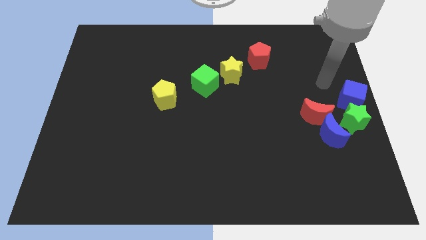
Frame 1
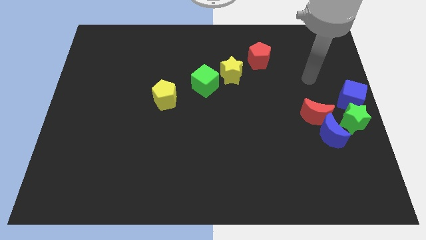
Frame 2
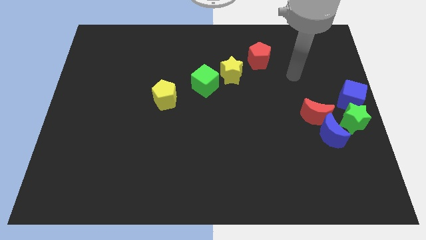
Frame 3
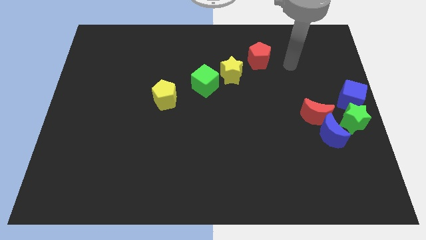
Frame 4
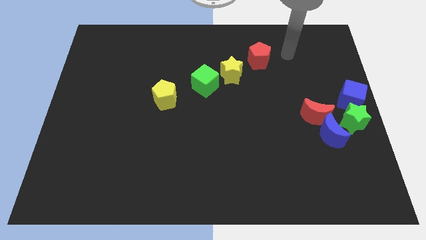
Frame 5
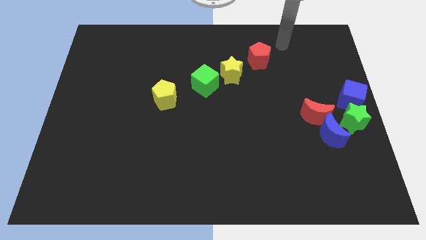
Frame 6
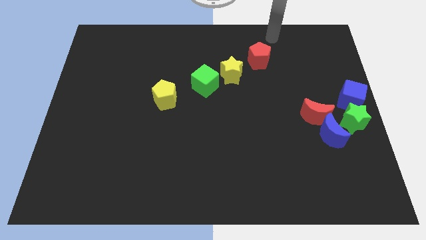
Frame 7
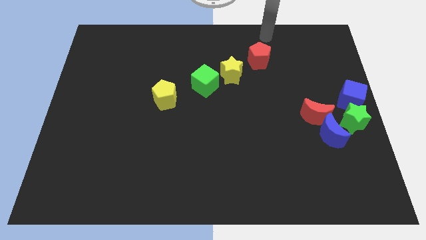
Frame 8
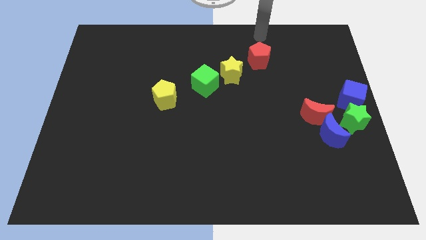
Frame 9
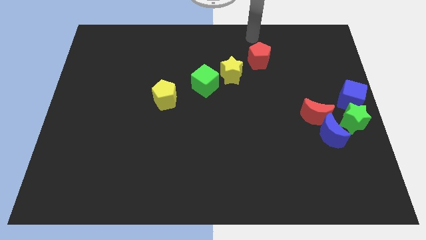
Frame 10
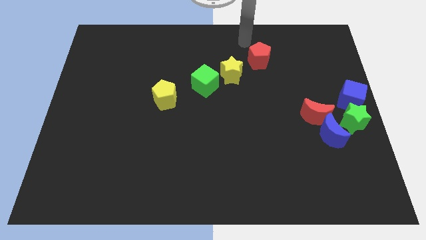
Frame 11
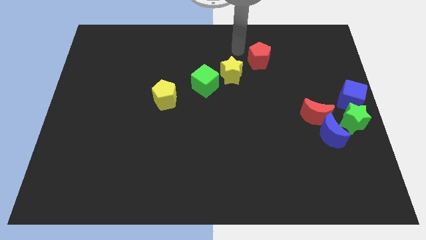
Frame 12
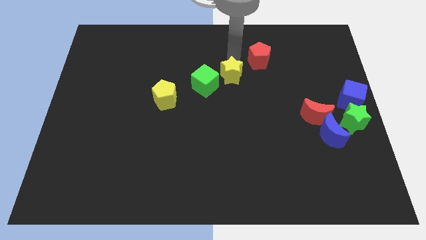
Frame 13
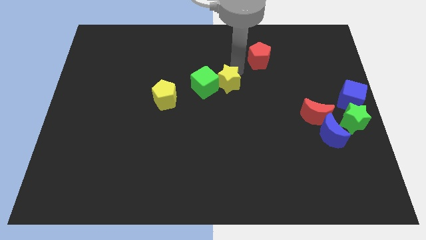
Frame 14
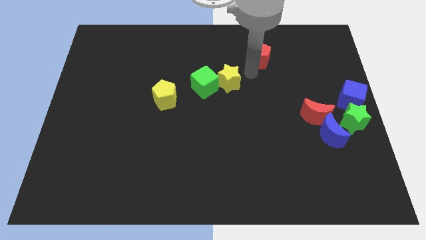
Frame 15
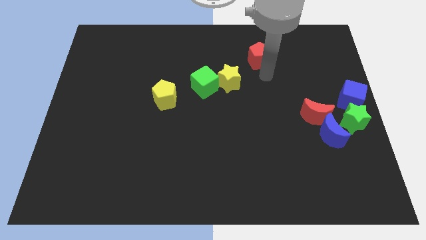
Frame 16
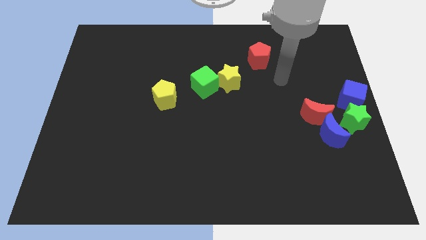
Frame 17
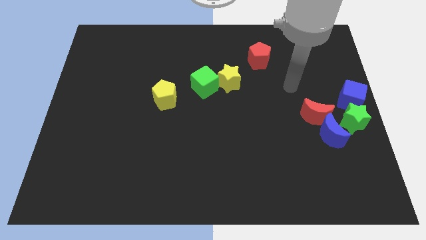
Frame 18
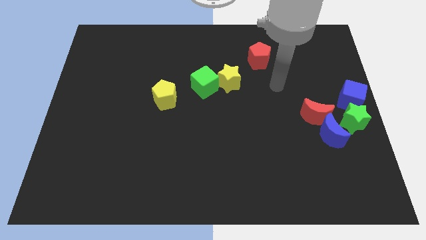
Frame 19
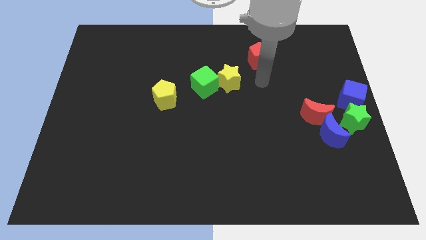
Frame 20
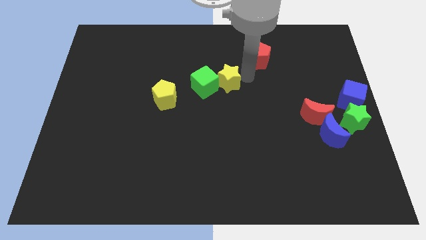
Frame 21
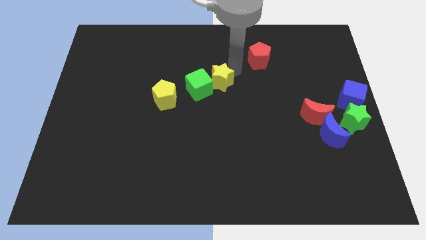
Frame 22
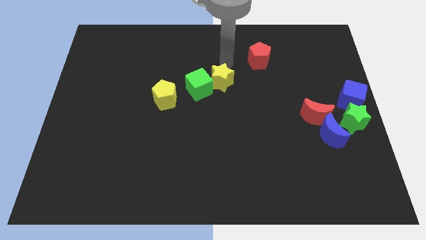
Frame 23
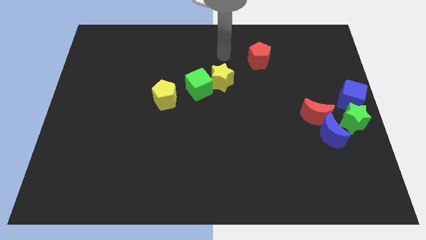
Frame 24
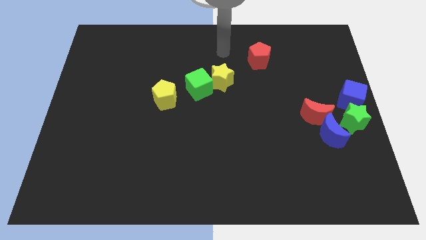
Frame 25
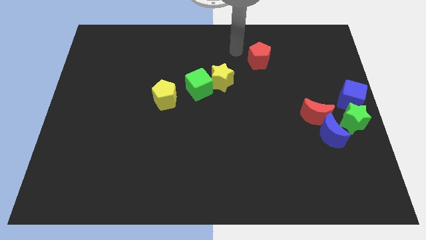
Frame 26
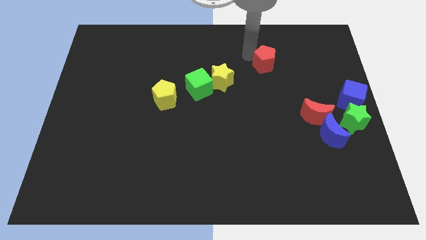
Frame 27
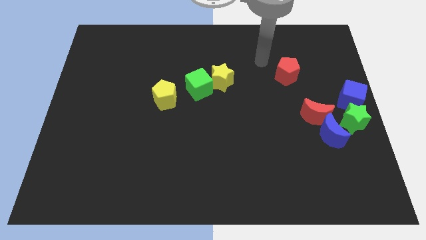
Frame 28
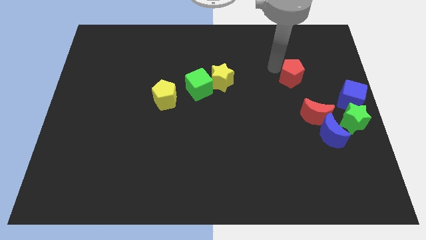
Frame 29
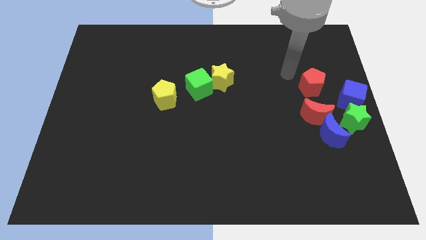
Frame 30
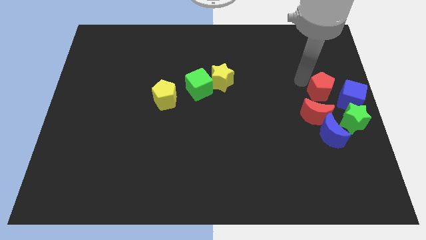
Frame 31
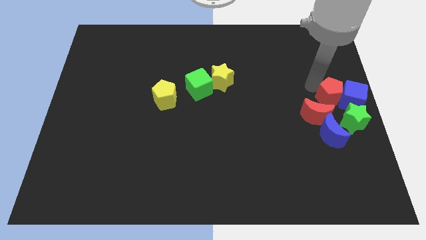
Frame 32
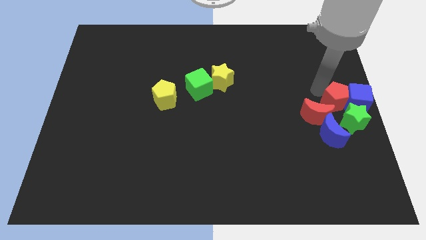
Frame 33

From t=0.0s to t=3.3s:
place the red pentagon to the right of the red crescent

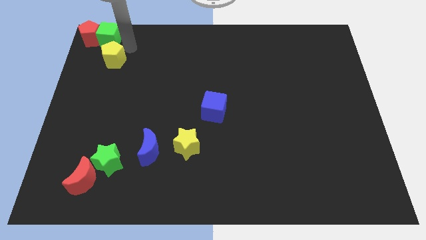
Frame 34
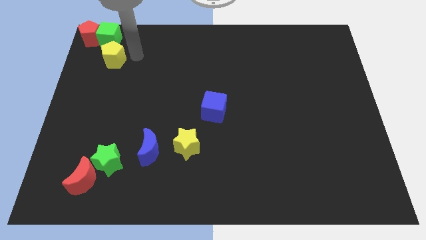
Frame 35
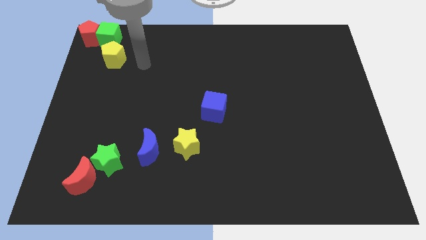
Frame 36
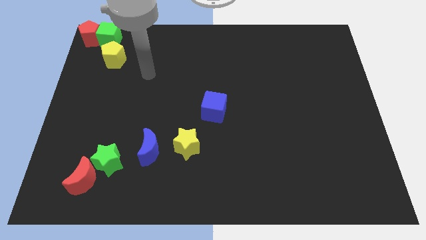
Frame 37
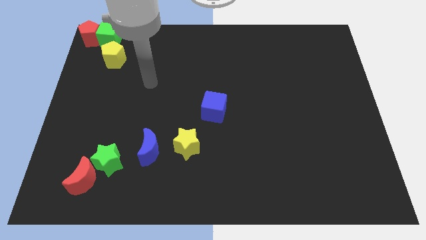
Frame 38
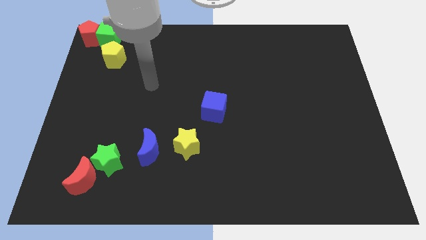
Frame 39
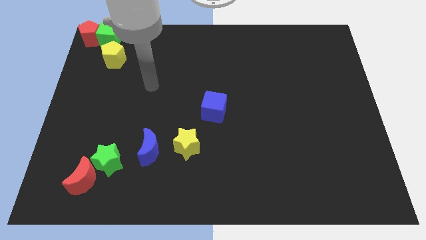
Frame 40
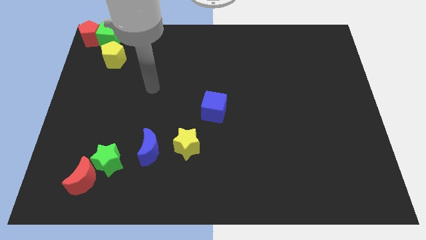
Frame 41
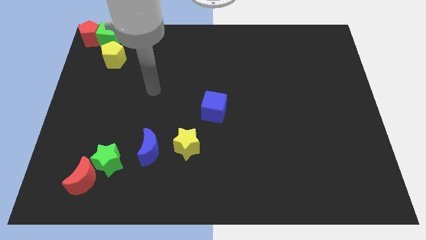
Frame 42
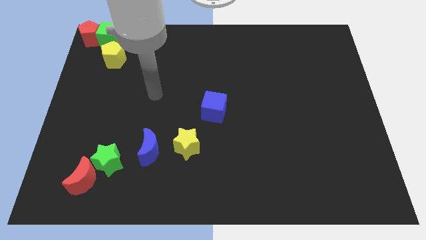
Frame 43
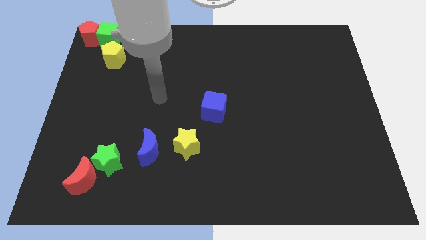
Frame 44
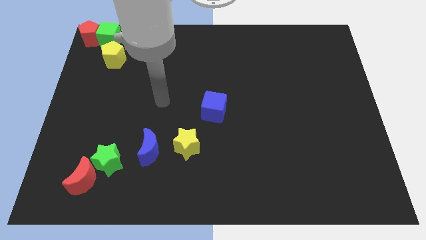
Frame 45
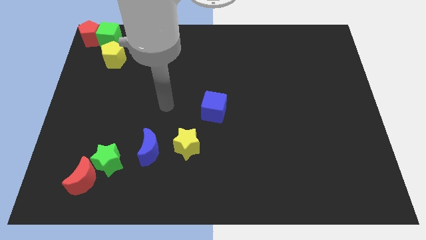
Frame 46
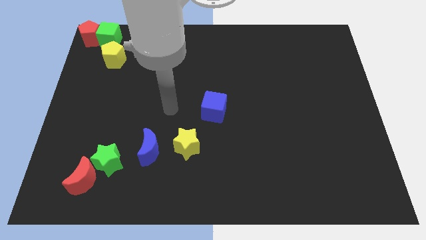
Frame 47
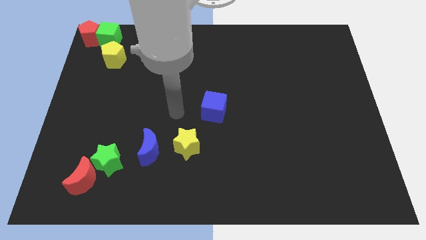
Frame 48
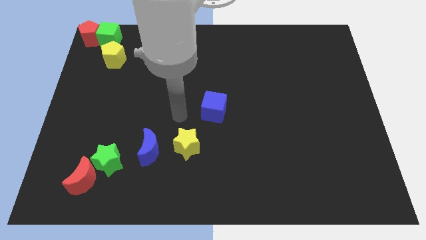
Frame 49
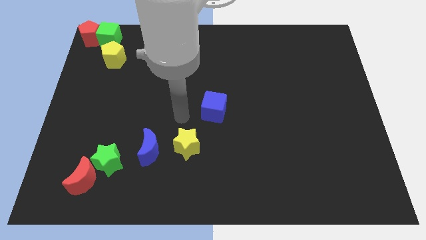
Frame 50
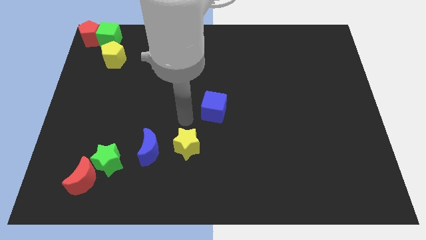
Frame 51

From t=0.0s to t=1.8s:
move the arm to the top of the yellow star

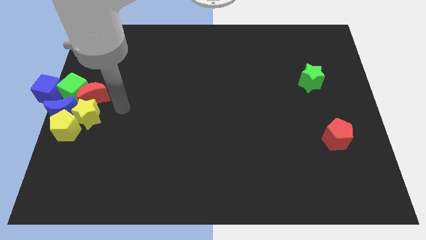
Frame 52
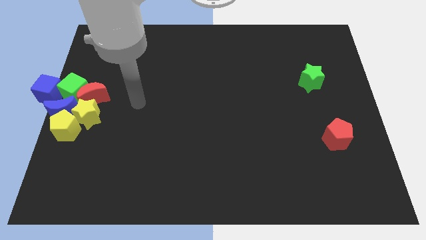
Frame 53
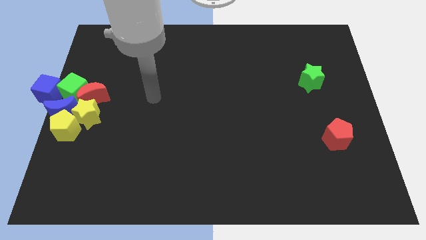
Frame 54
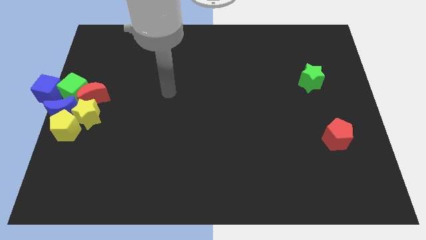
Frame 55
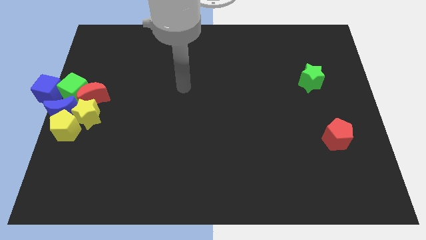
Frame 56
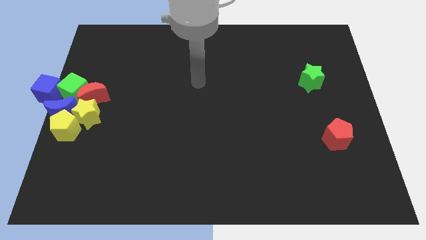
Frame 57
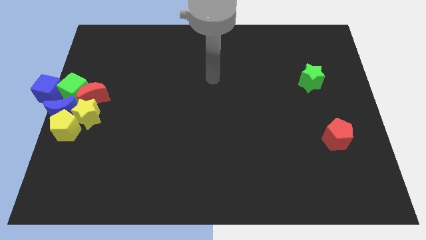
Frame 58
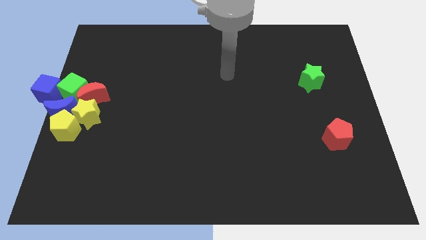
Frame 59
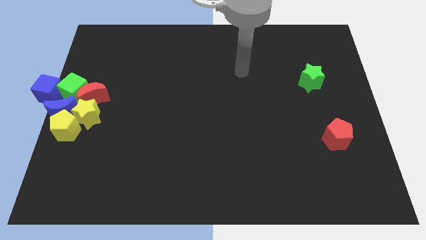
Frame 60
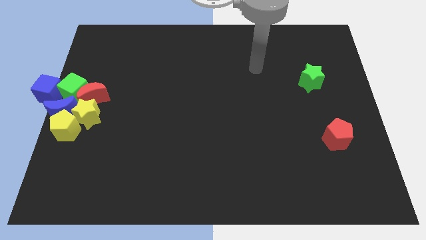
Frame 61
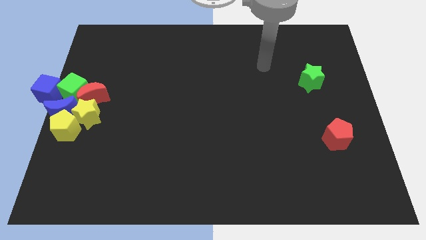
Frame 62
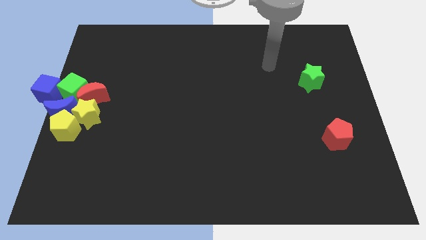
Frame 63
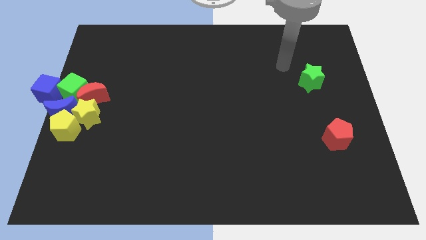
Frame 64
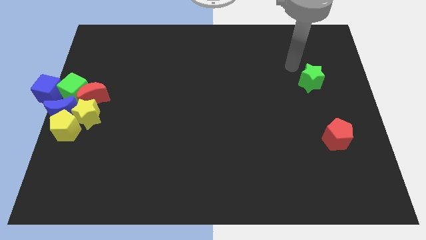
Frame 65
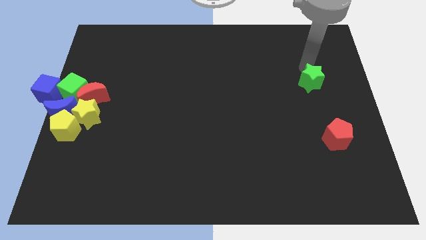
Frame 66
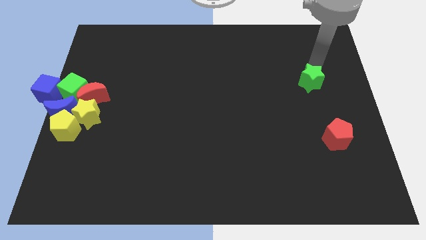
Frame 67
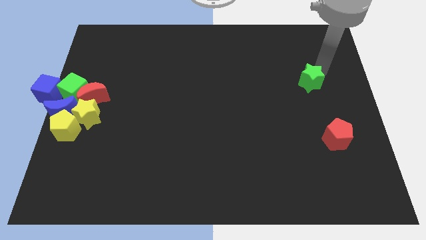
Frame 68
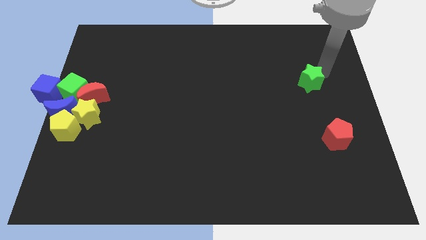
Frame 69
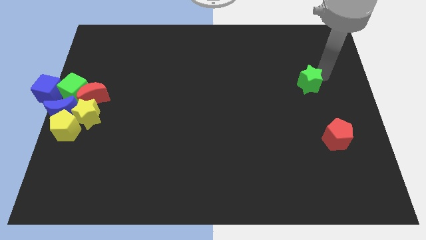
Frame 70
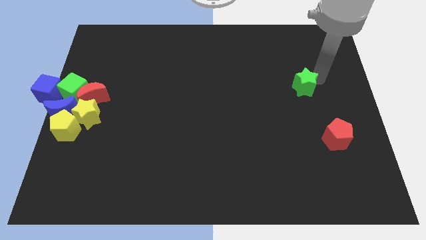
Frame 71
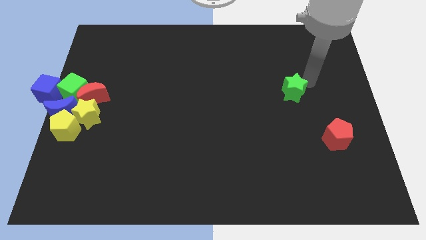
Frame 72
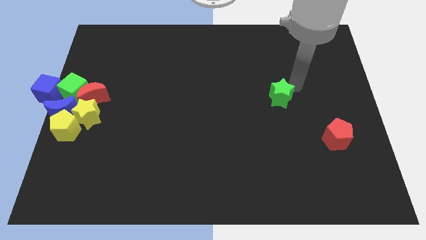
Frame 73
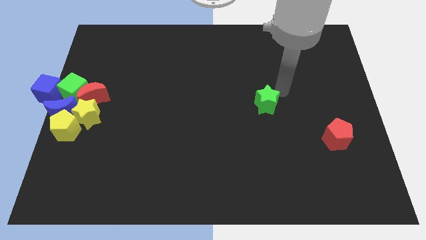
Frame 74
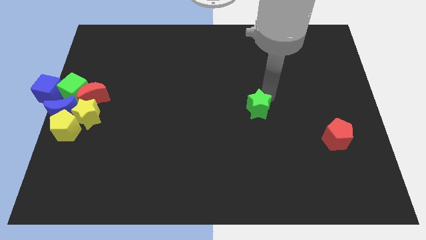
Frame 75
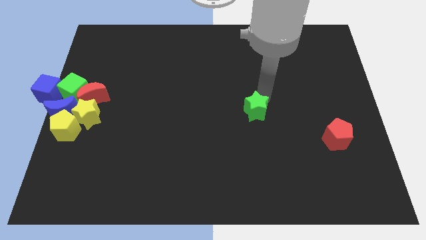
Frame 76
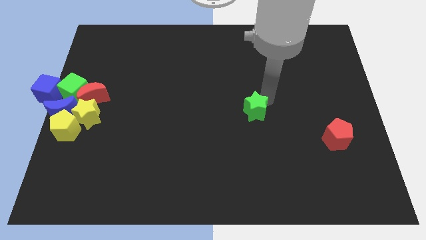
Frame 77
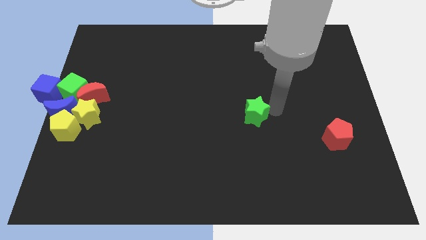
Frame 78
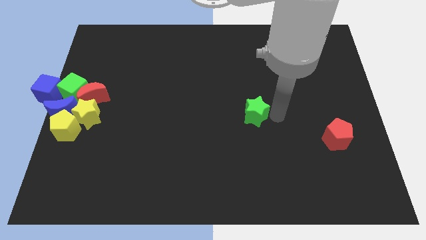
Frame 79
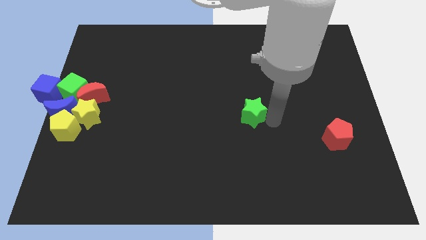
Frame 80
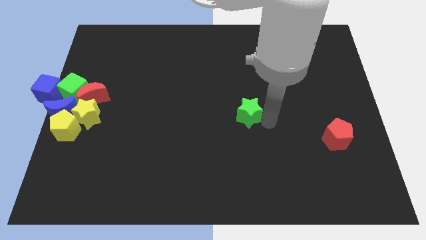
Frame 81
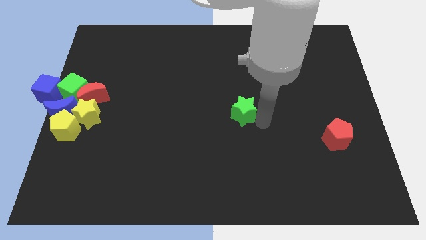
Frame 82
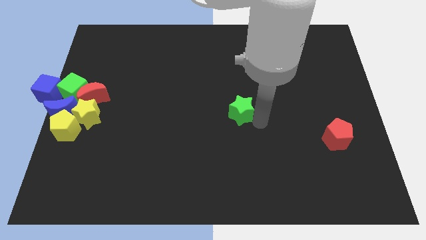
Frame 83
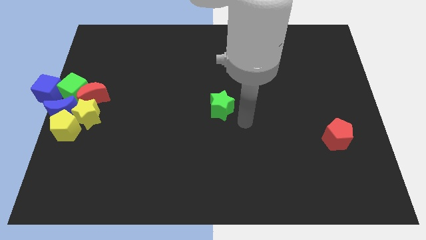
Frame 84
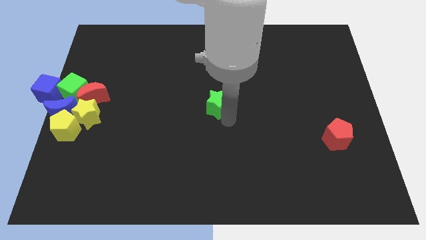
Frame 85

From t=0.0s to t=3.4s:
place the green star at the center of the board

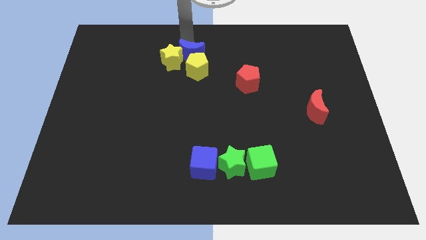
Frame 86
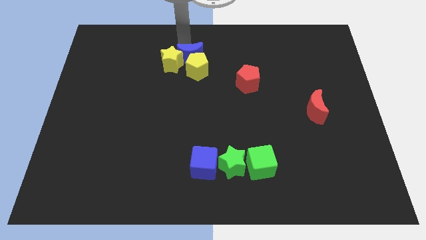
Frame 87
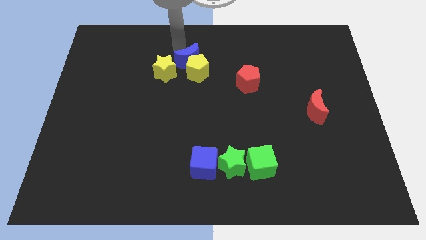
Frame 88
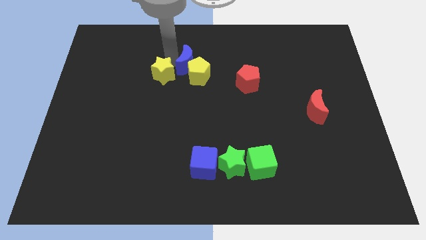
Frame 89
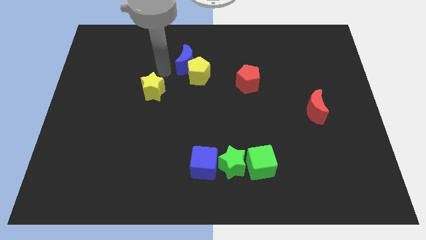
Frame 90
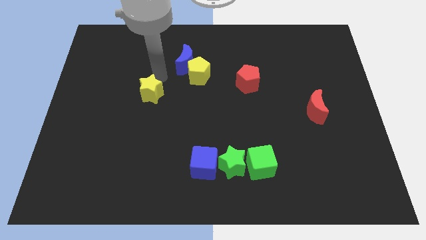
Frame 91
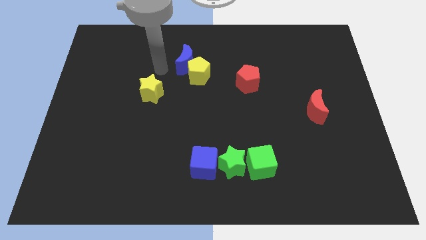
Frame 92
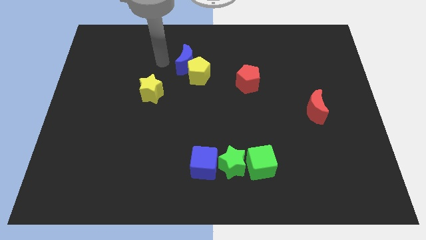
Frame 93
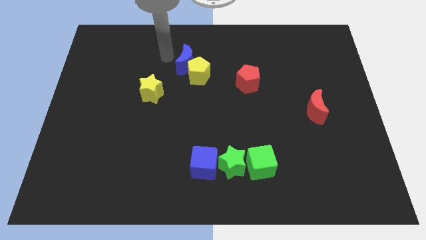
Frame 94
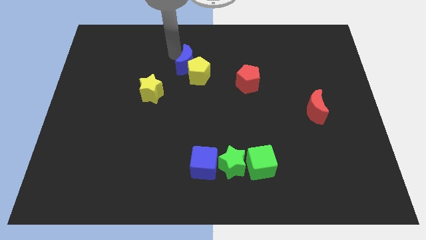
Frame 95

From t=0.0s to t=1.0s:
separate yellow star from blue moon
